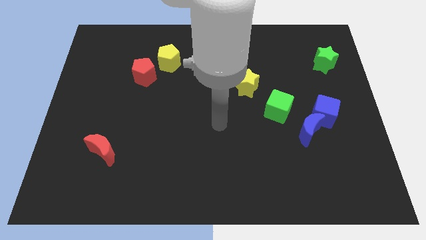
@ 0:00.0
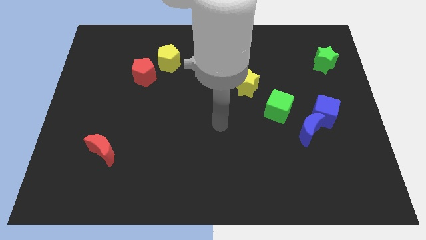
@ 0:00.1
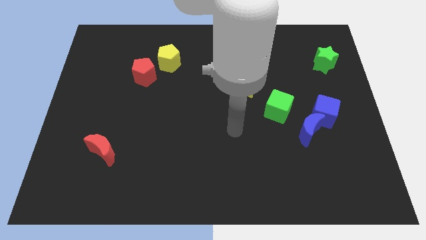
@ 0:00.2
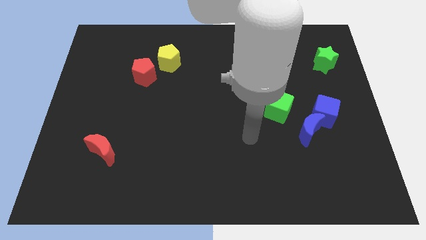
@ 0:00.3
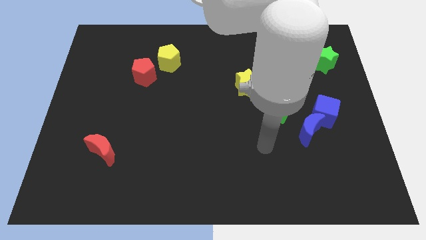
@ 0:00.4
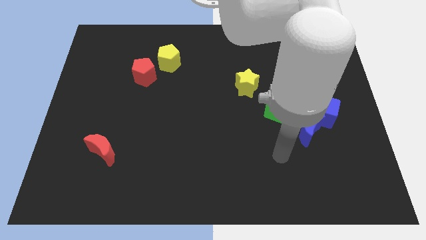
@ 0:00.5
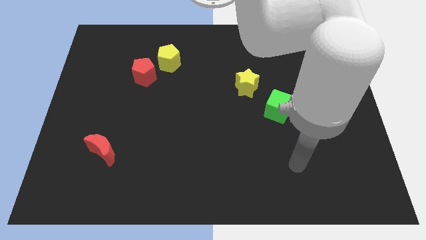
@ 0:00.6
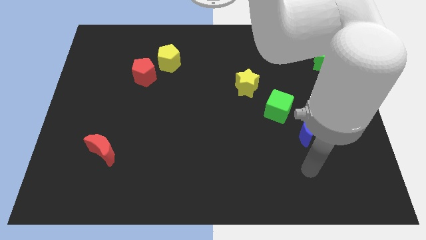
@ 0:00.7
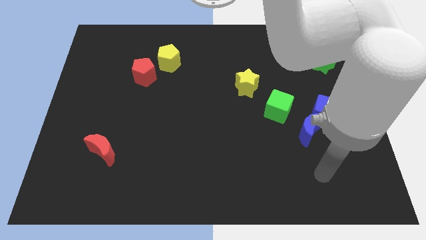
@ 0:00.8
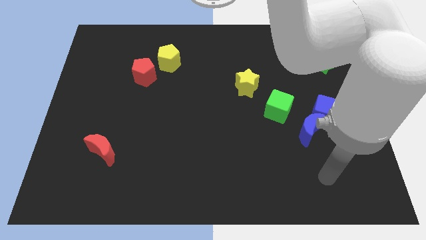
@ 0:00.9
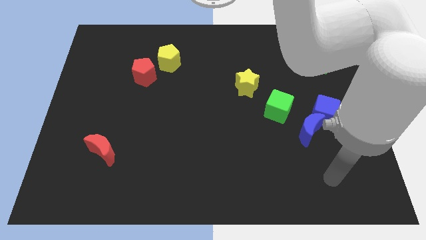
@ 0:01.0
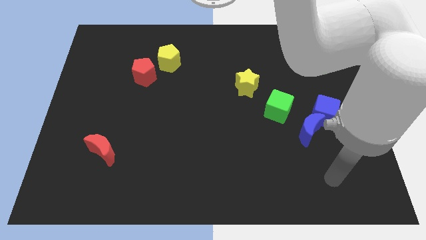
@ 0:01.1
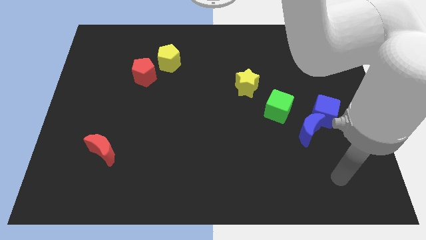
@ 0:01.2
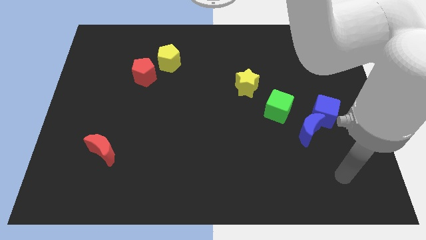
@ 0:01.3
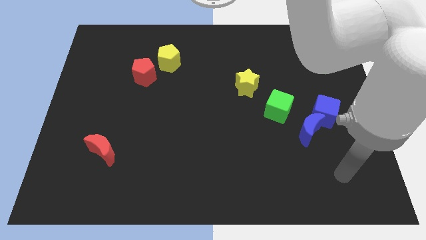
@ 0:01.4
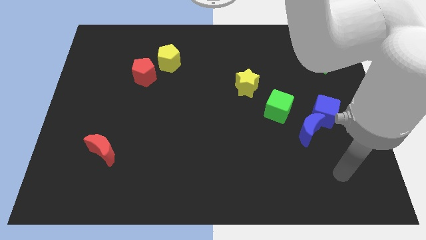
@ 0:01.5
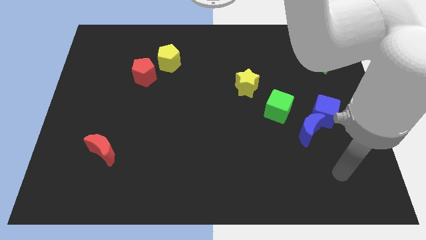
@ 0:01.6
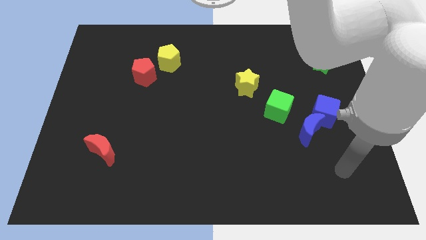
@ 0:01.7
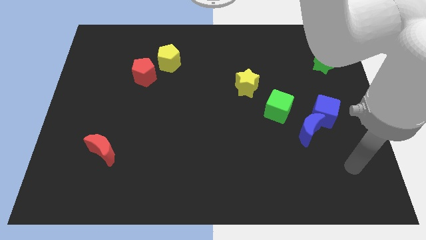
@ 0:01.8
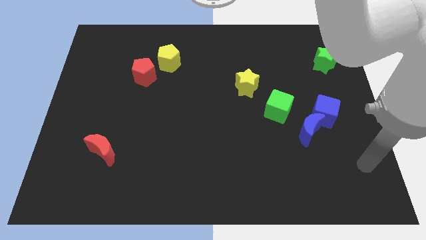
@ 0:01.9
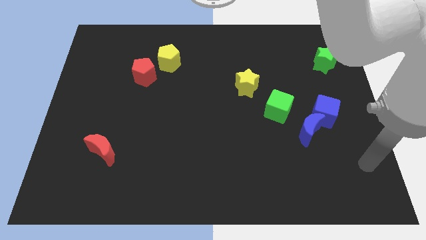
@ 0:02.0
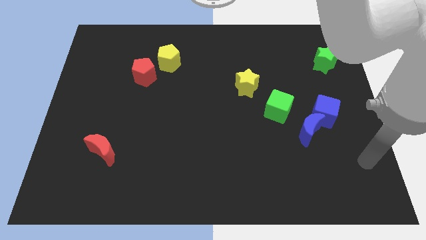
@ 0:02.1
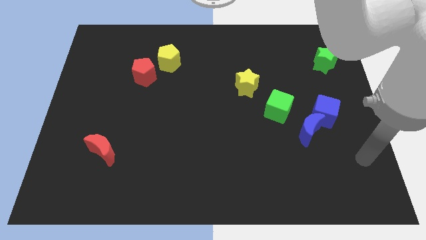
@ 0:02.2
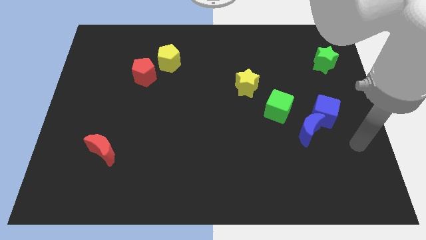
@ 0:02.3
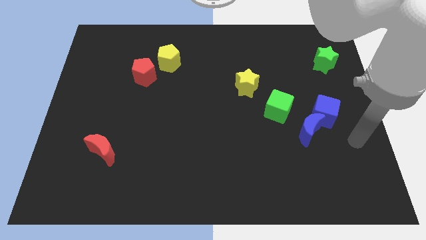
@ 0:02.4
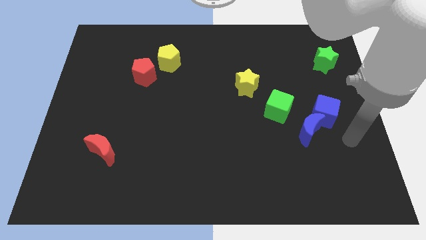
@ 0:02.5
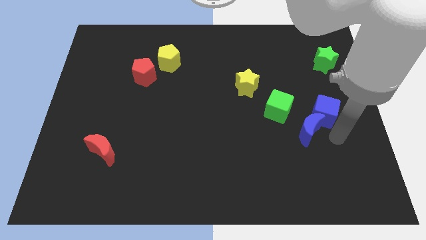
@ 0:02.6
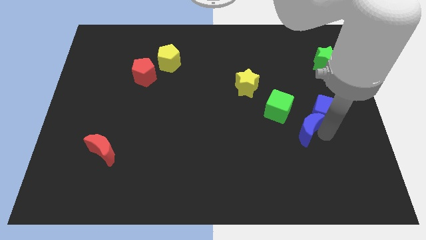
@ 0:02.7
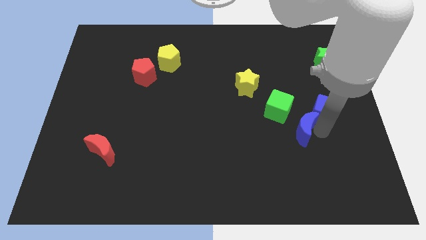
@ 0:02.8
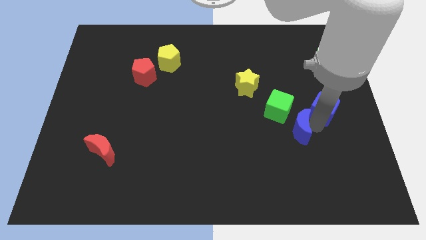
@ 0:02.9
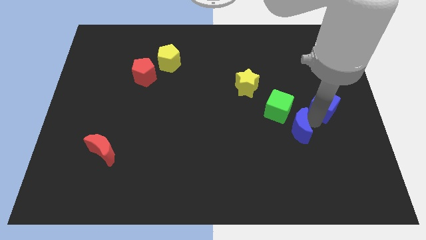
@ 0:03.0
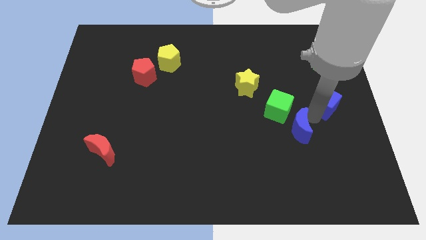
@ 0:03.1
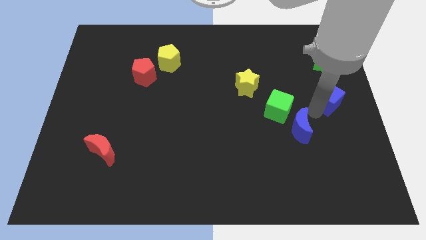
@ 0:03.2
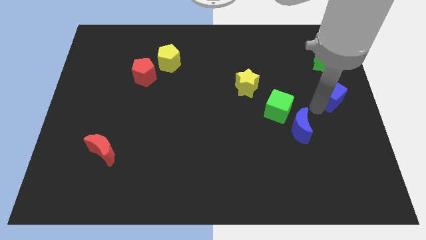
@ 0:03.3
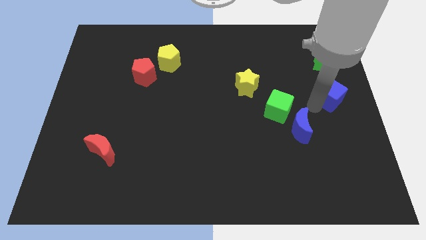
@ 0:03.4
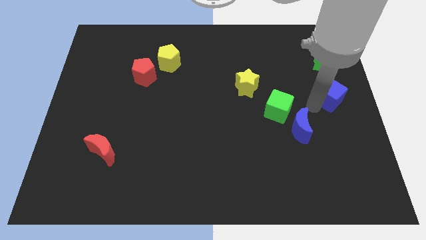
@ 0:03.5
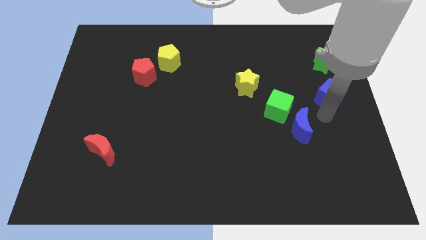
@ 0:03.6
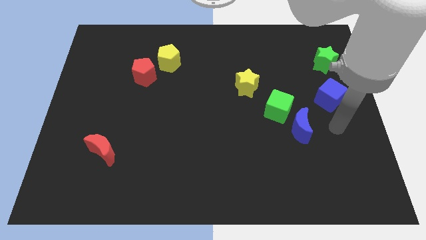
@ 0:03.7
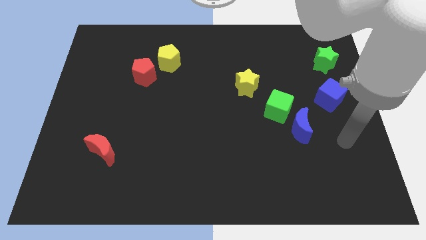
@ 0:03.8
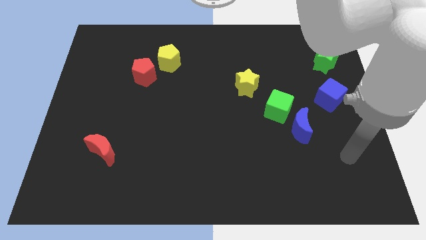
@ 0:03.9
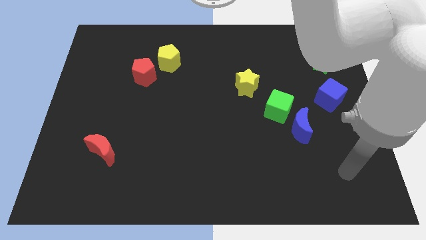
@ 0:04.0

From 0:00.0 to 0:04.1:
move the blue cube away from the top side of the blue crescent

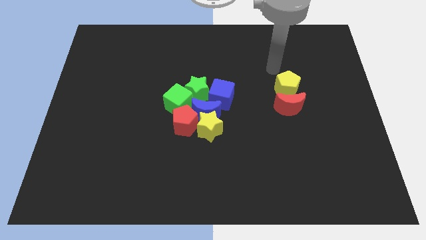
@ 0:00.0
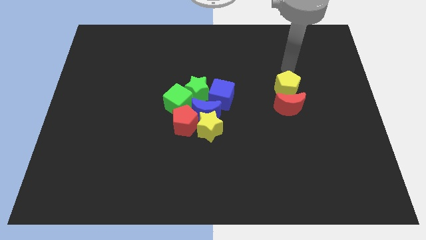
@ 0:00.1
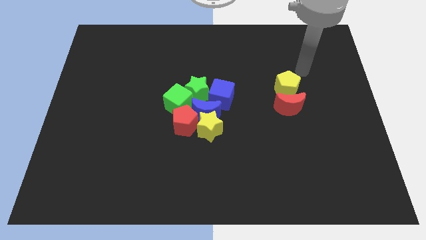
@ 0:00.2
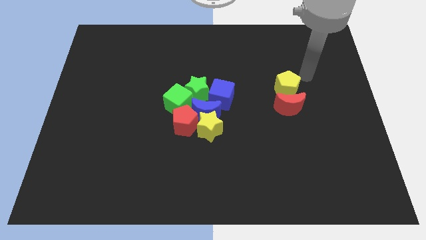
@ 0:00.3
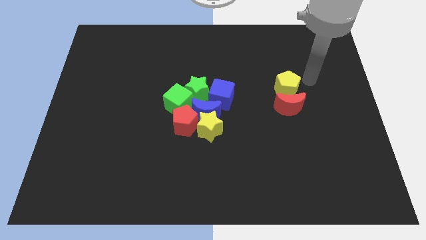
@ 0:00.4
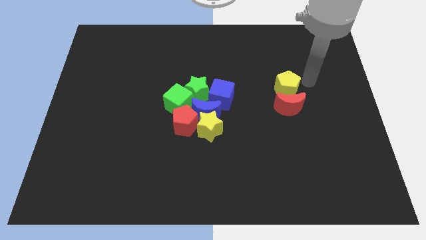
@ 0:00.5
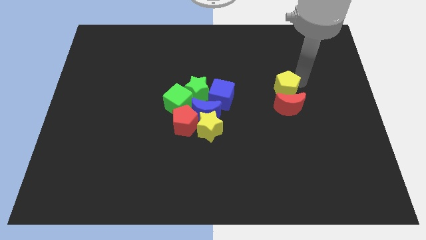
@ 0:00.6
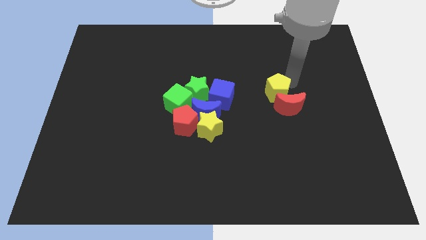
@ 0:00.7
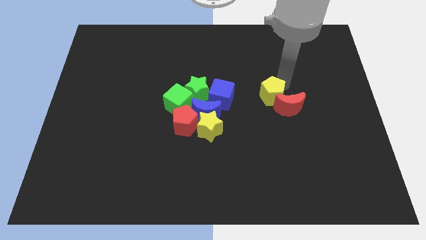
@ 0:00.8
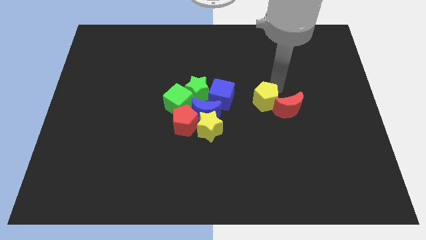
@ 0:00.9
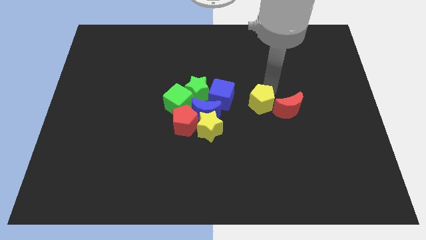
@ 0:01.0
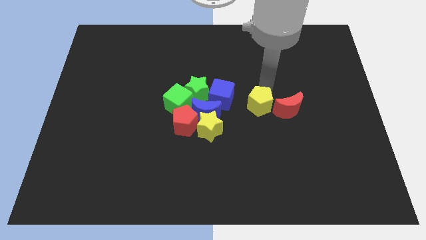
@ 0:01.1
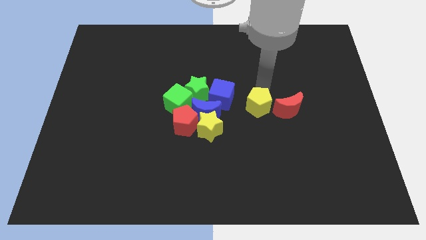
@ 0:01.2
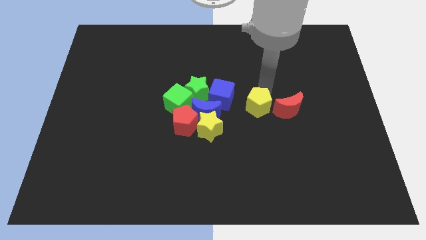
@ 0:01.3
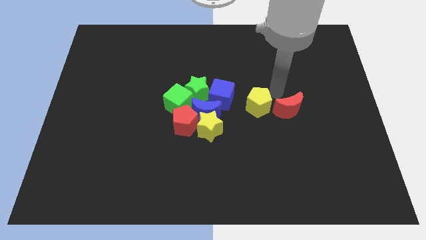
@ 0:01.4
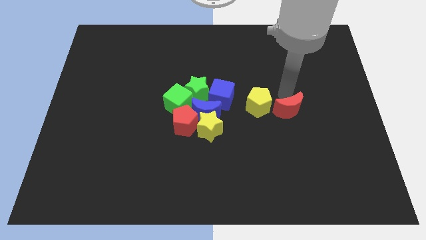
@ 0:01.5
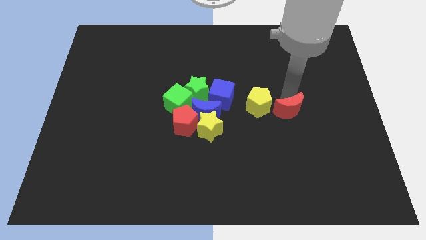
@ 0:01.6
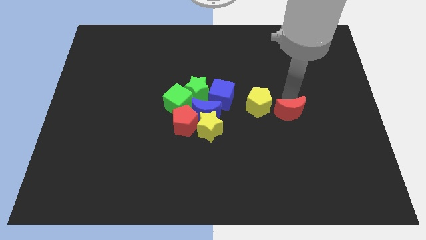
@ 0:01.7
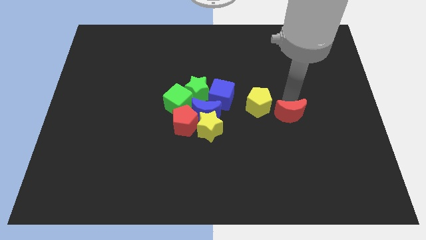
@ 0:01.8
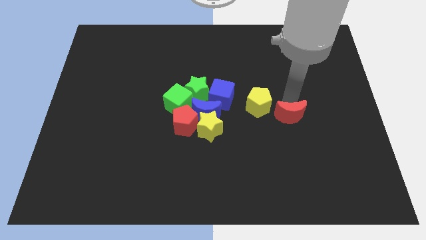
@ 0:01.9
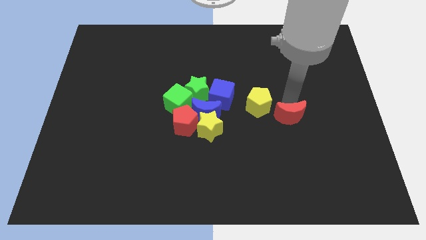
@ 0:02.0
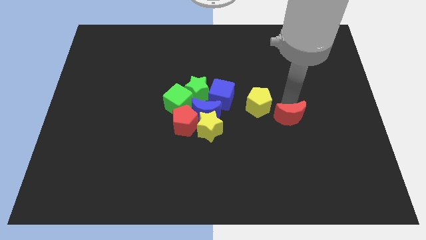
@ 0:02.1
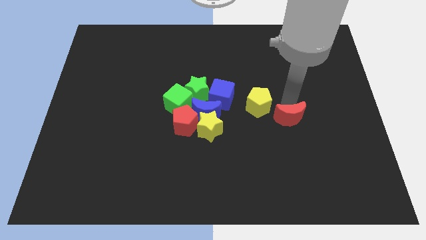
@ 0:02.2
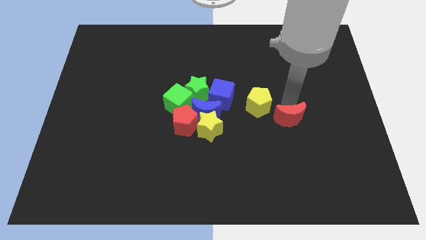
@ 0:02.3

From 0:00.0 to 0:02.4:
push the yellow pentagon slightly towards the right of the blue cube

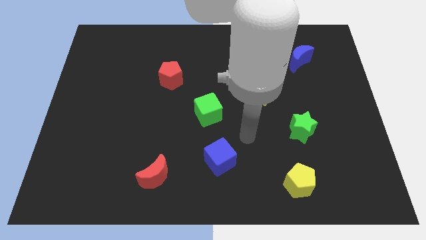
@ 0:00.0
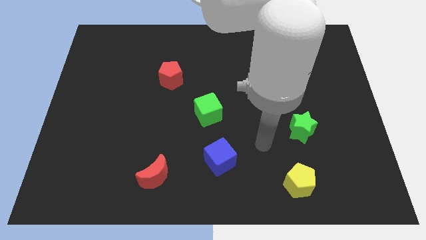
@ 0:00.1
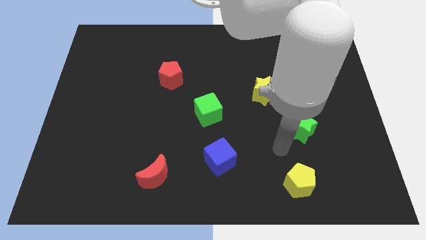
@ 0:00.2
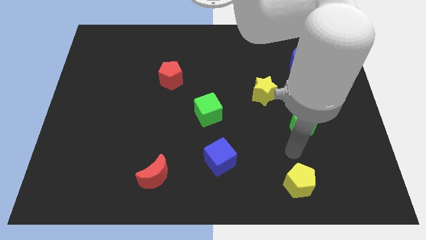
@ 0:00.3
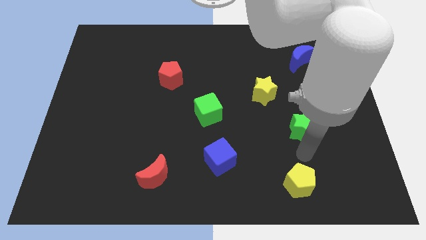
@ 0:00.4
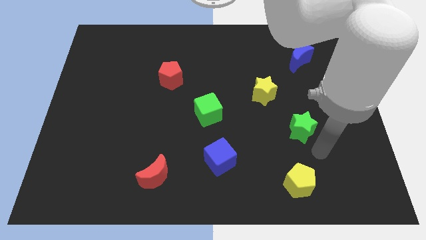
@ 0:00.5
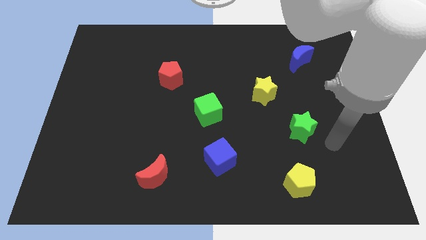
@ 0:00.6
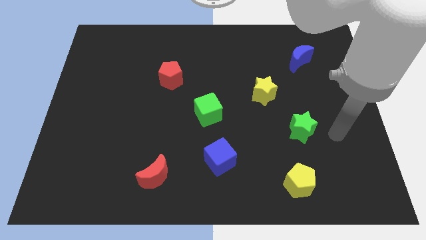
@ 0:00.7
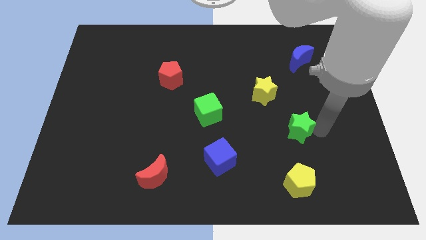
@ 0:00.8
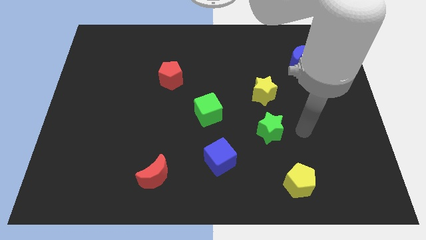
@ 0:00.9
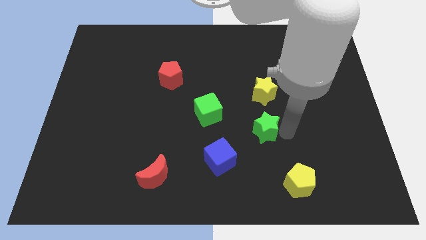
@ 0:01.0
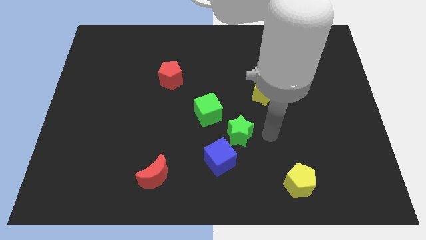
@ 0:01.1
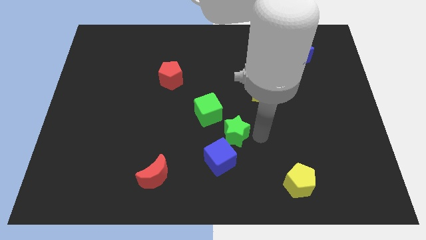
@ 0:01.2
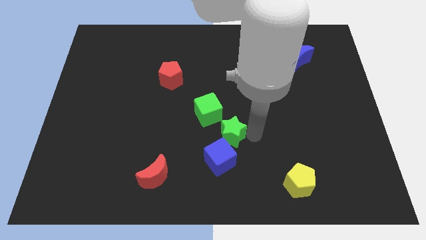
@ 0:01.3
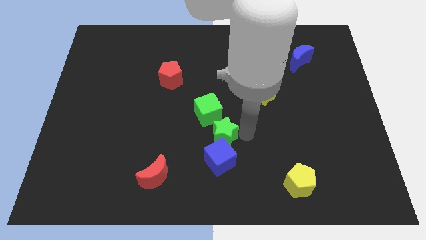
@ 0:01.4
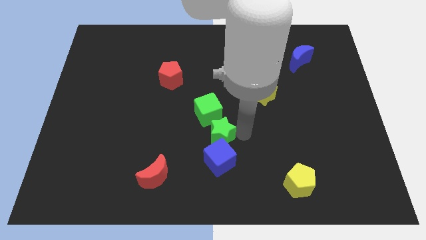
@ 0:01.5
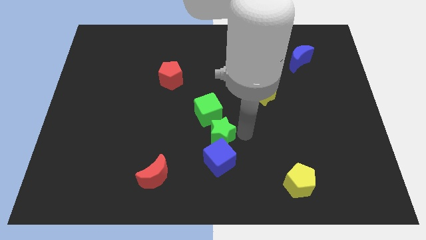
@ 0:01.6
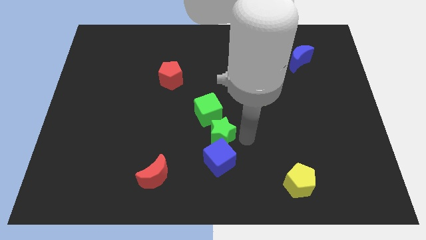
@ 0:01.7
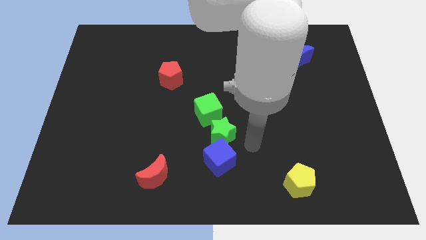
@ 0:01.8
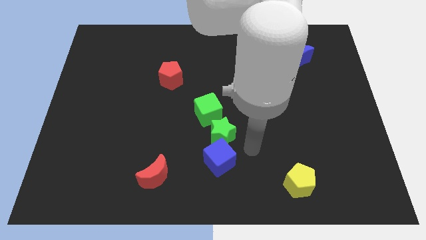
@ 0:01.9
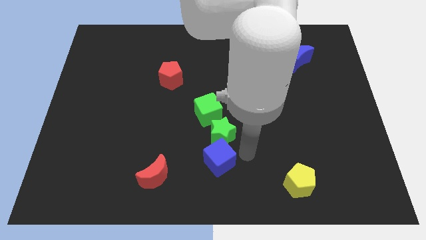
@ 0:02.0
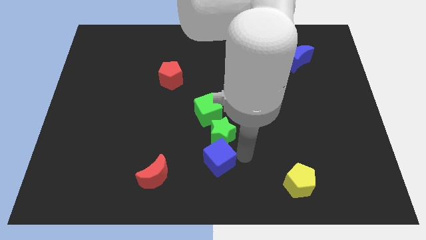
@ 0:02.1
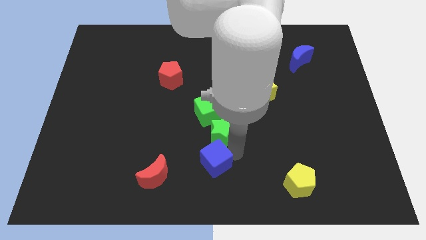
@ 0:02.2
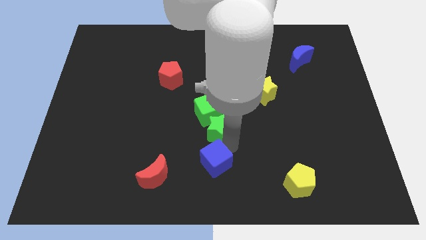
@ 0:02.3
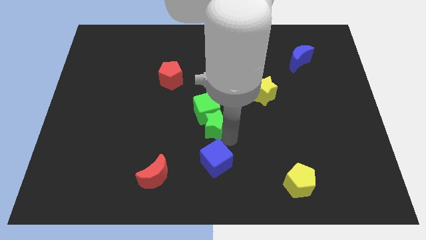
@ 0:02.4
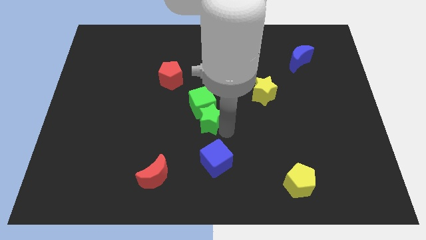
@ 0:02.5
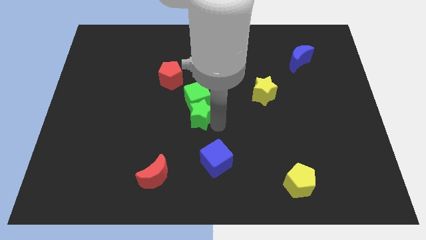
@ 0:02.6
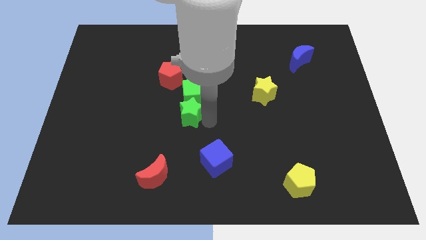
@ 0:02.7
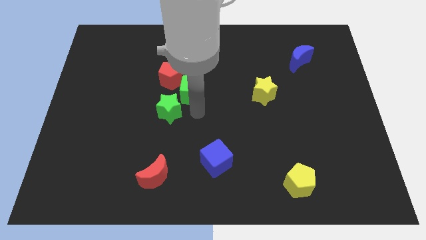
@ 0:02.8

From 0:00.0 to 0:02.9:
place the green star below the red pentagon
